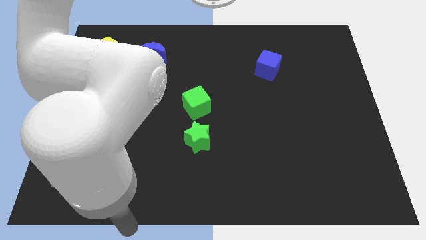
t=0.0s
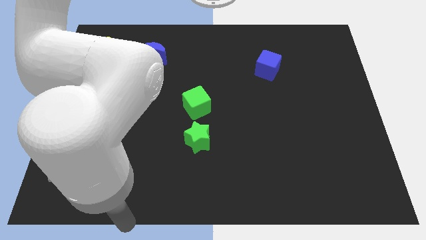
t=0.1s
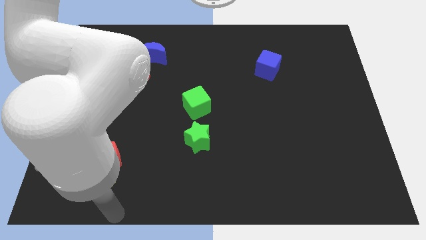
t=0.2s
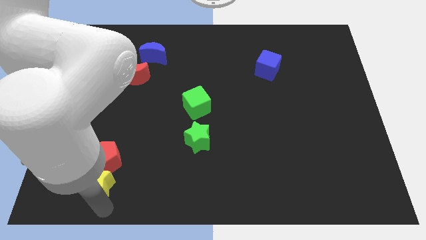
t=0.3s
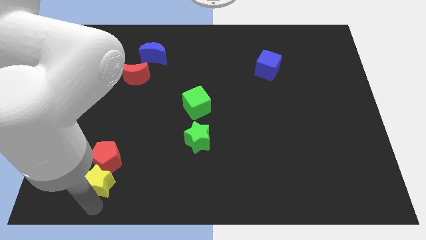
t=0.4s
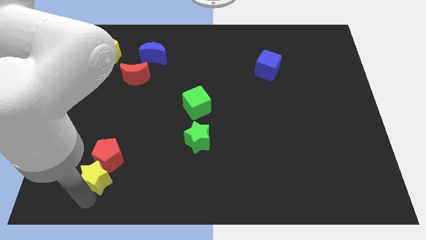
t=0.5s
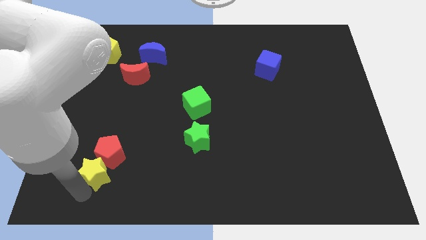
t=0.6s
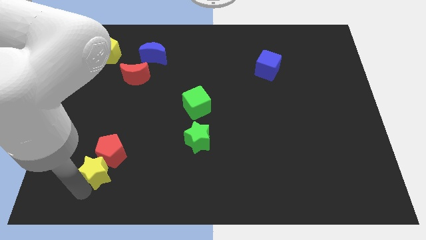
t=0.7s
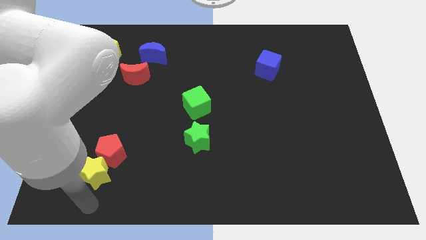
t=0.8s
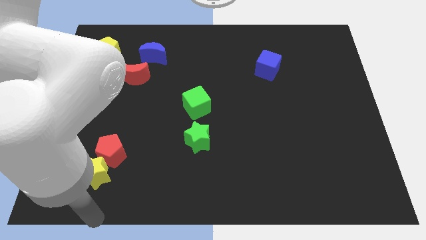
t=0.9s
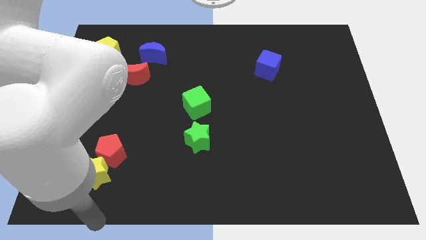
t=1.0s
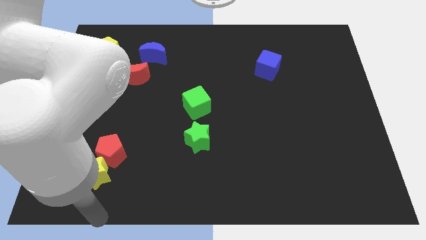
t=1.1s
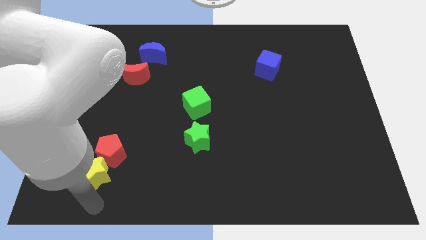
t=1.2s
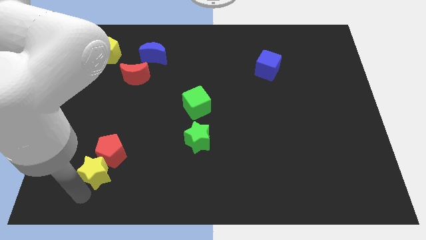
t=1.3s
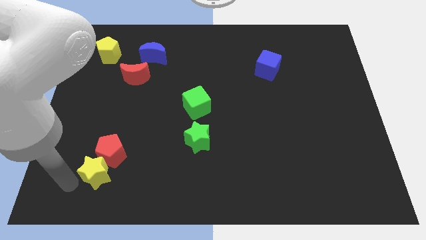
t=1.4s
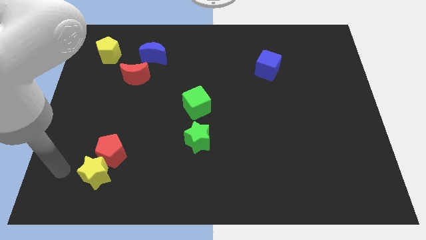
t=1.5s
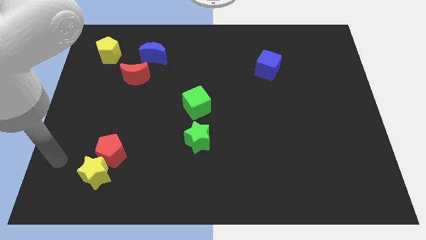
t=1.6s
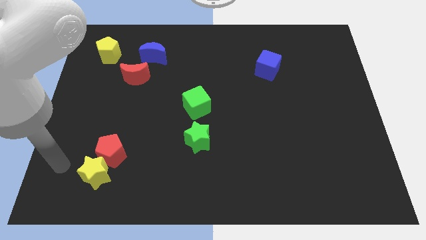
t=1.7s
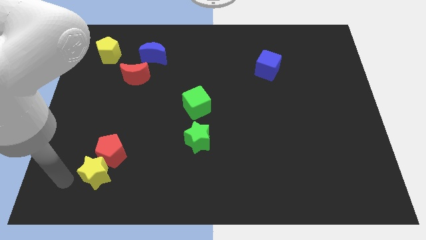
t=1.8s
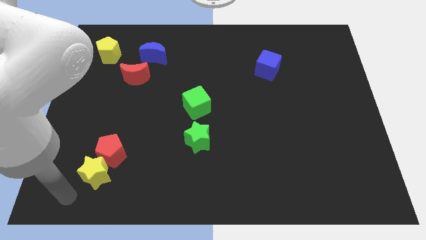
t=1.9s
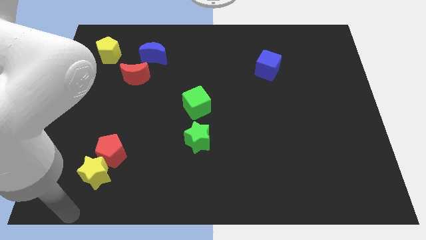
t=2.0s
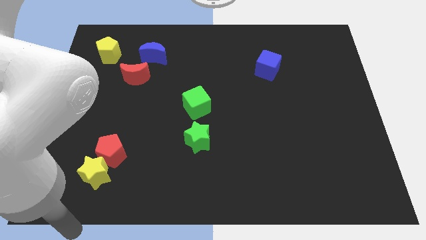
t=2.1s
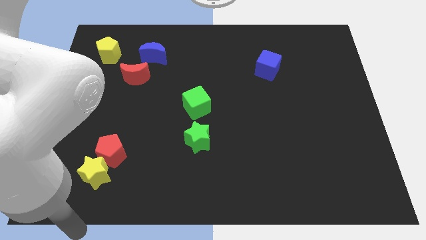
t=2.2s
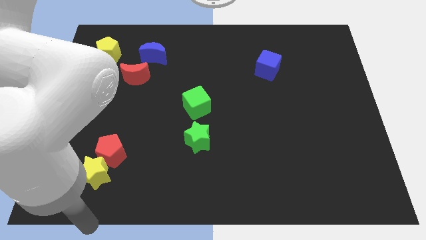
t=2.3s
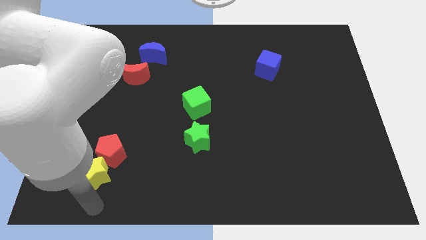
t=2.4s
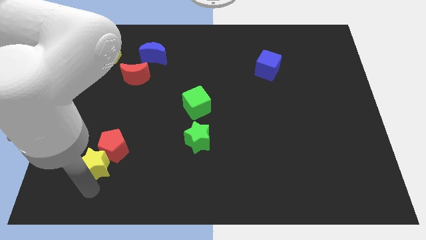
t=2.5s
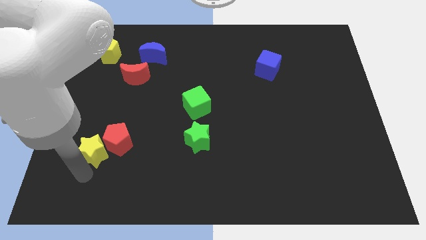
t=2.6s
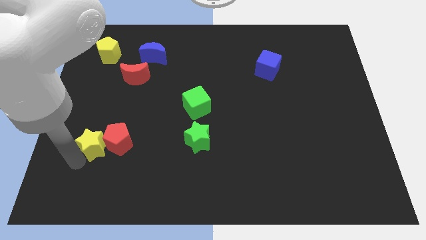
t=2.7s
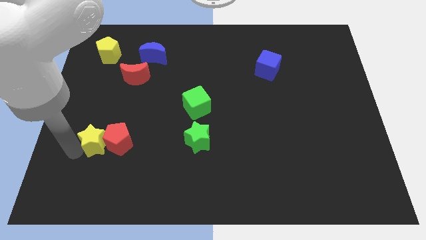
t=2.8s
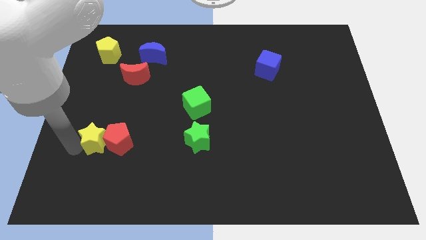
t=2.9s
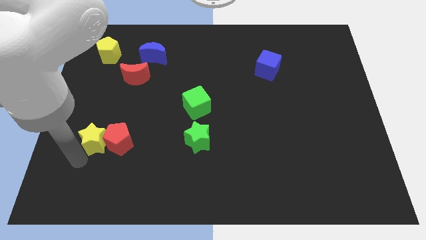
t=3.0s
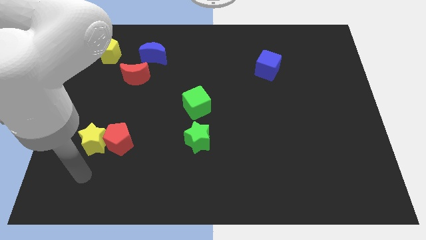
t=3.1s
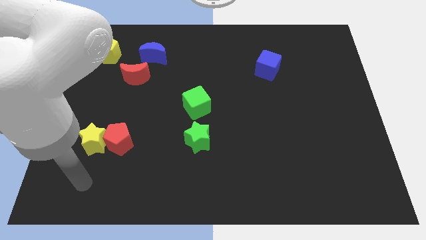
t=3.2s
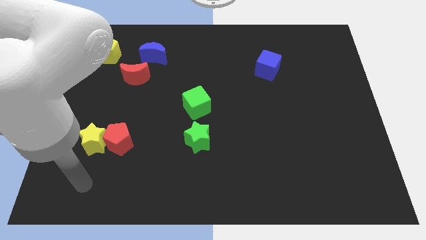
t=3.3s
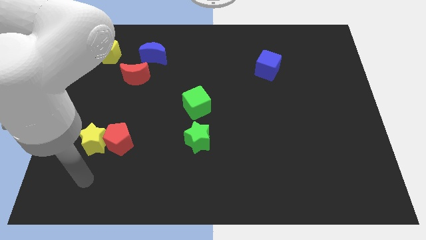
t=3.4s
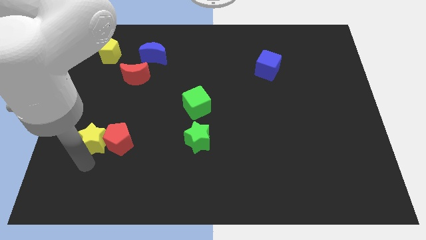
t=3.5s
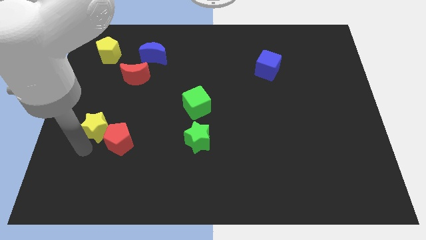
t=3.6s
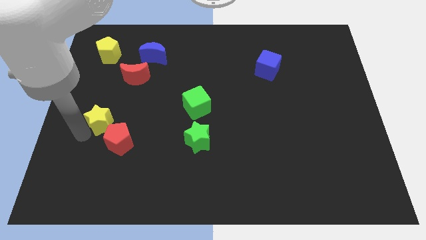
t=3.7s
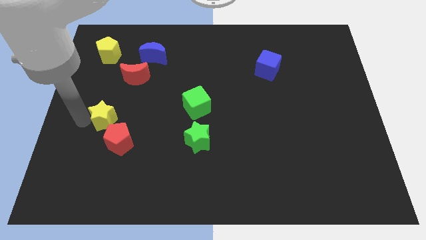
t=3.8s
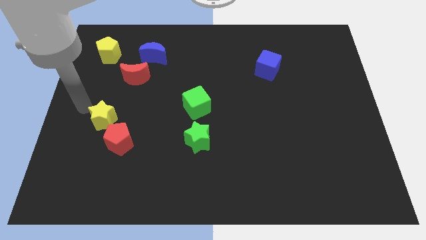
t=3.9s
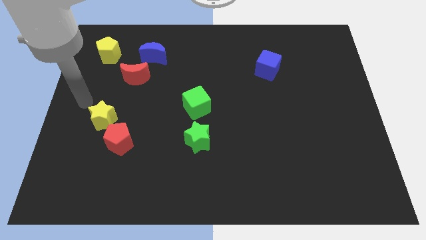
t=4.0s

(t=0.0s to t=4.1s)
move the yellow star towards the center left

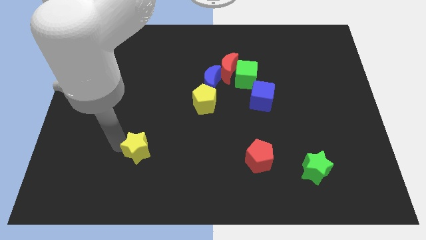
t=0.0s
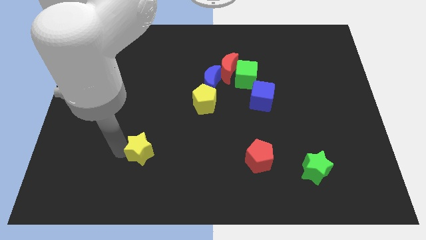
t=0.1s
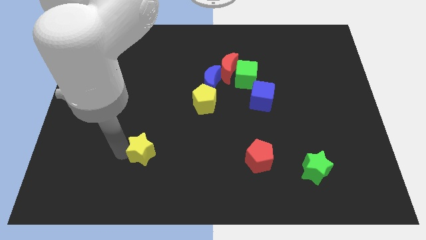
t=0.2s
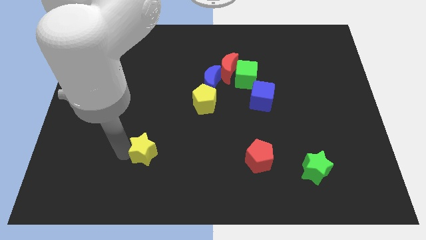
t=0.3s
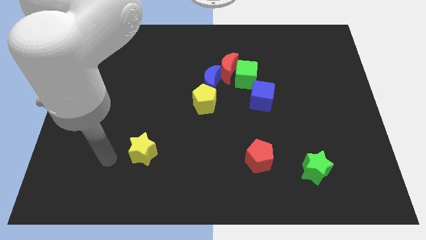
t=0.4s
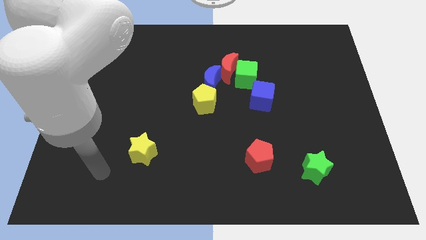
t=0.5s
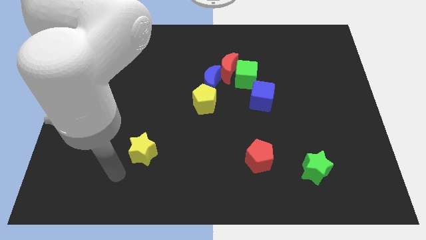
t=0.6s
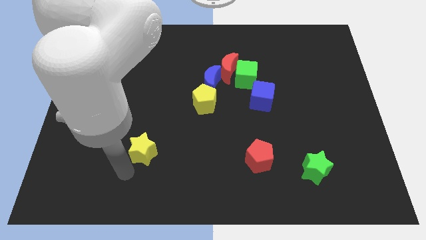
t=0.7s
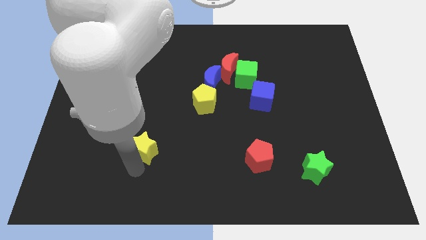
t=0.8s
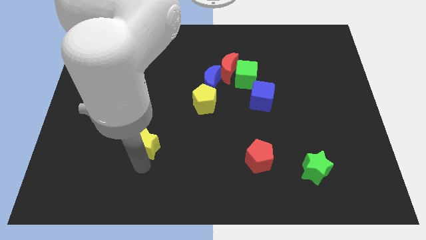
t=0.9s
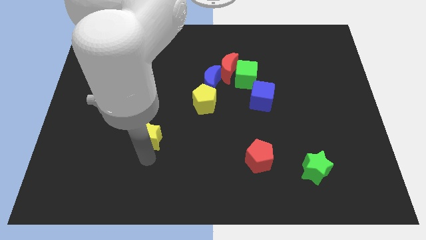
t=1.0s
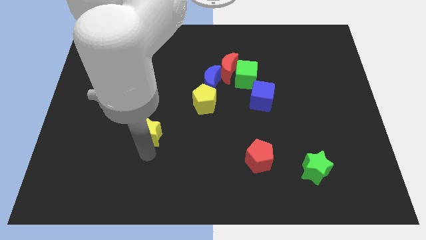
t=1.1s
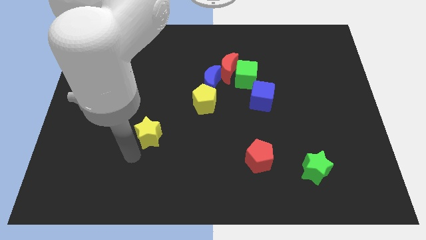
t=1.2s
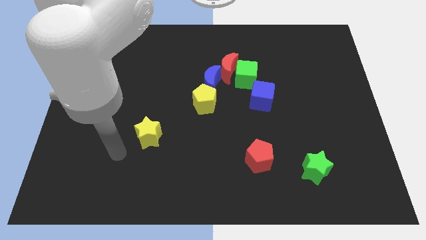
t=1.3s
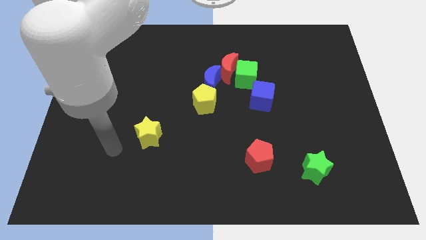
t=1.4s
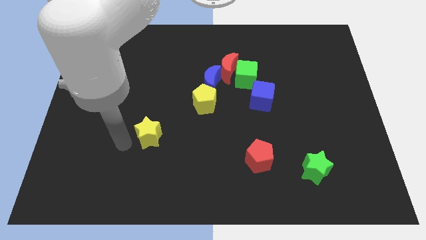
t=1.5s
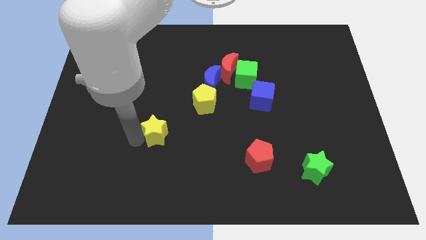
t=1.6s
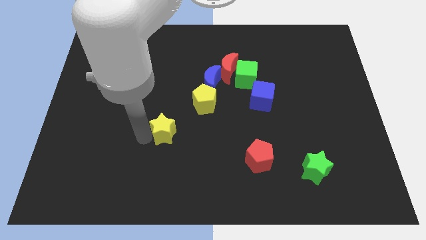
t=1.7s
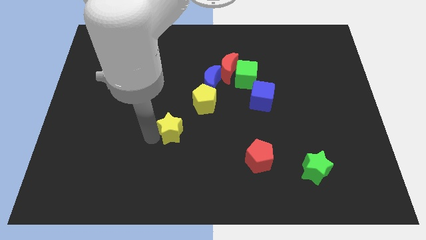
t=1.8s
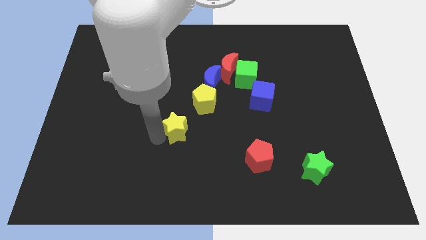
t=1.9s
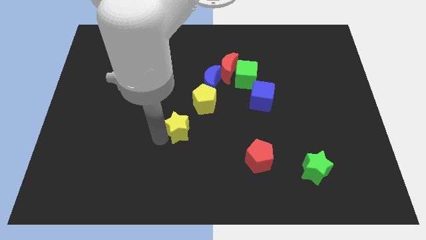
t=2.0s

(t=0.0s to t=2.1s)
place the yellow star diagonally bottom left to the yellow pentagon

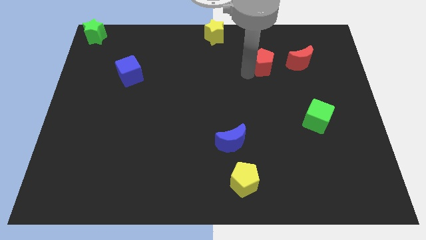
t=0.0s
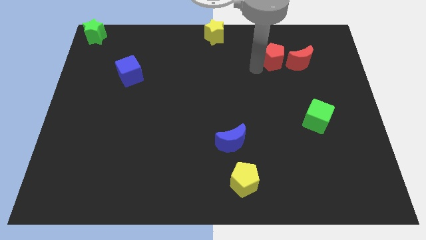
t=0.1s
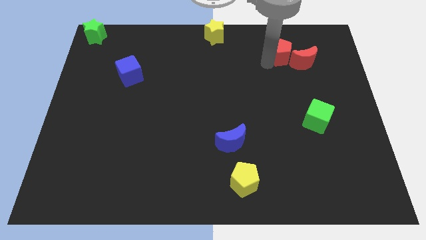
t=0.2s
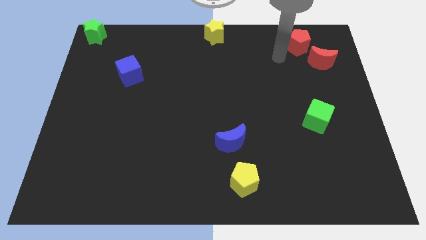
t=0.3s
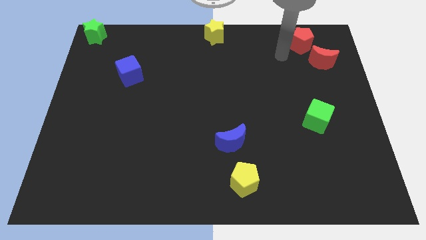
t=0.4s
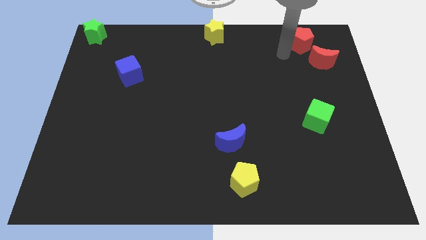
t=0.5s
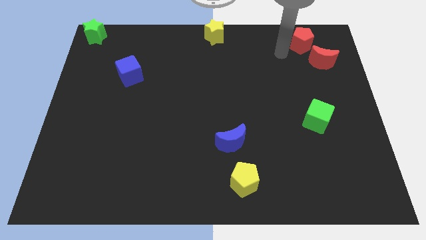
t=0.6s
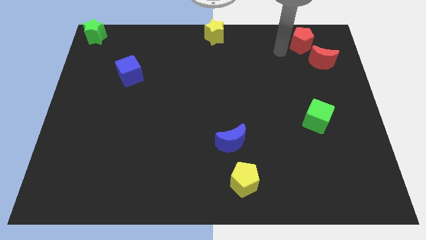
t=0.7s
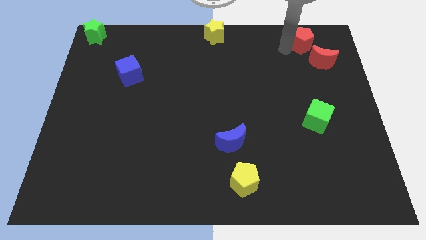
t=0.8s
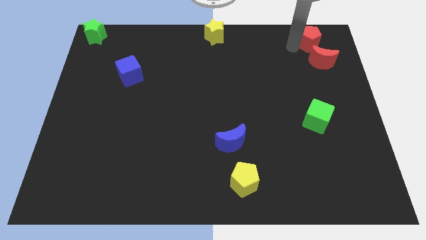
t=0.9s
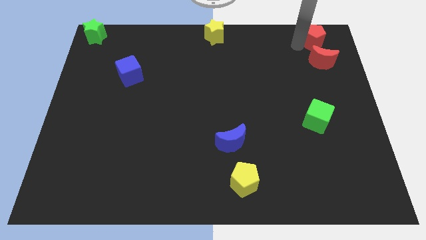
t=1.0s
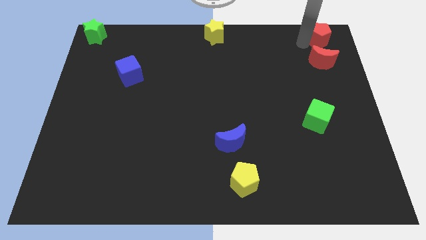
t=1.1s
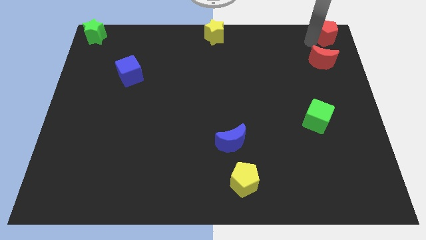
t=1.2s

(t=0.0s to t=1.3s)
put the red pentagon above the red crescent

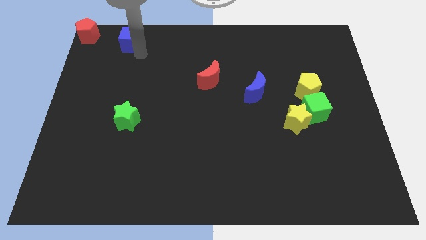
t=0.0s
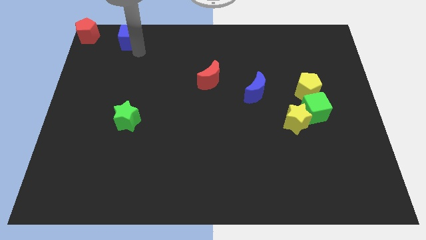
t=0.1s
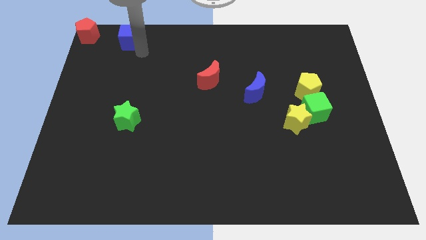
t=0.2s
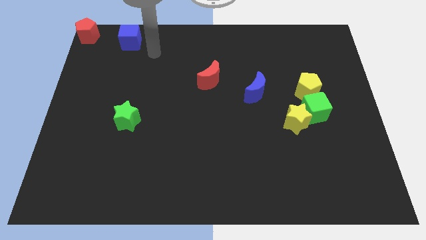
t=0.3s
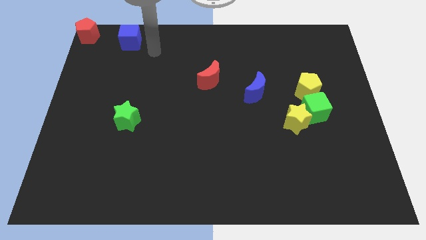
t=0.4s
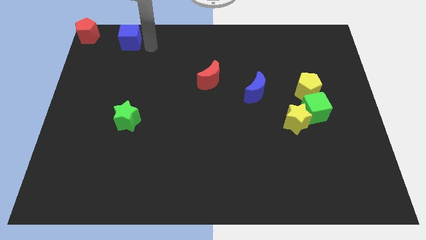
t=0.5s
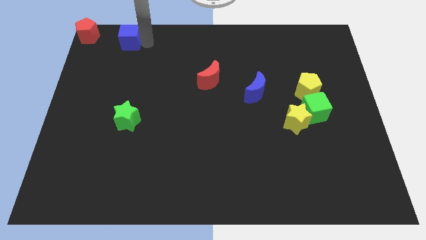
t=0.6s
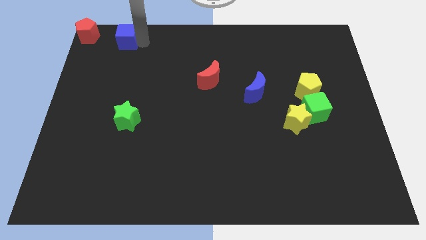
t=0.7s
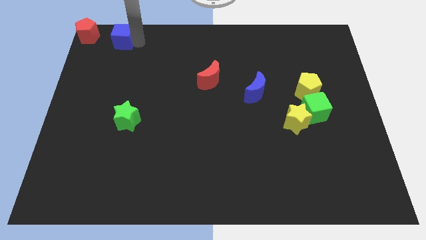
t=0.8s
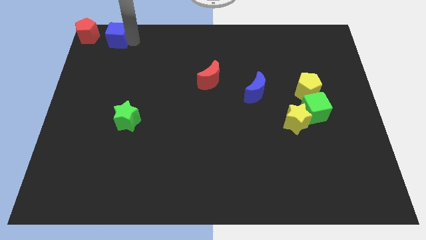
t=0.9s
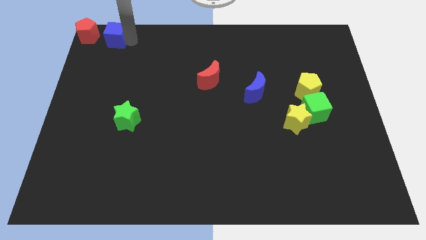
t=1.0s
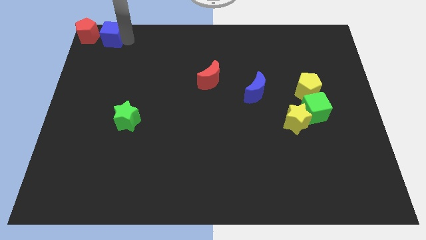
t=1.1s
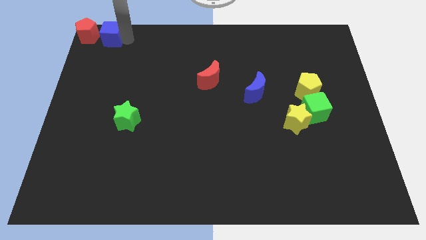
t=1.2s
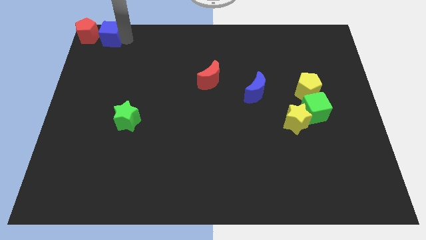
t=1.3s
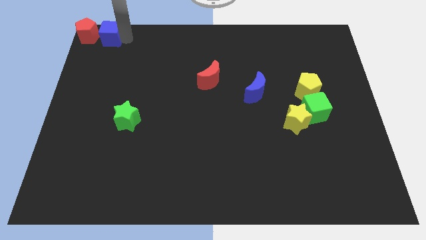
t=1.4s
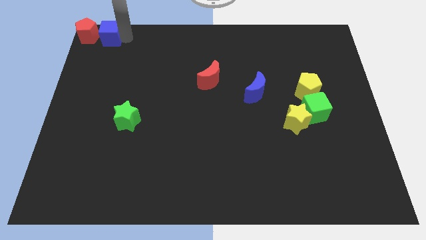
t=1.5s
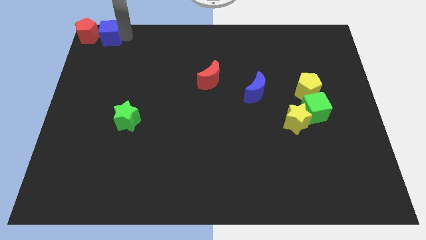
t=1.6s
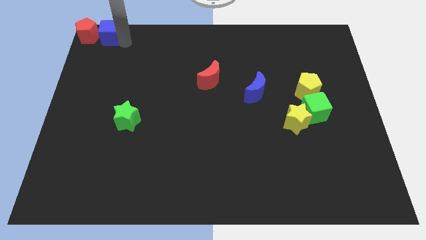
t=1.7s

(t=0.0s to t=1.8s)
place the blue cube to the right side of the red pentagon
